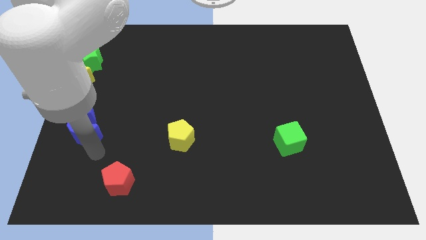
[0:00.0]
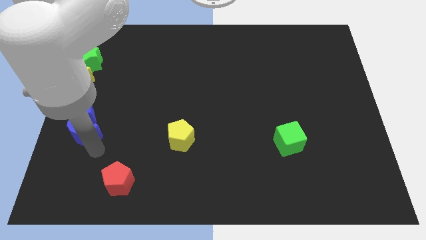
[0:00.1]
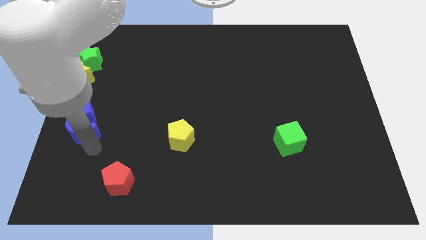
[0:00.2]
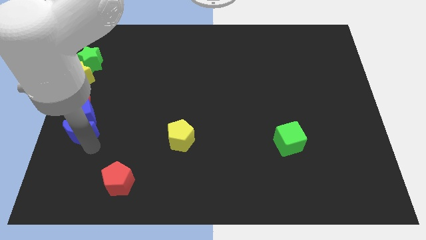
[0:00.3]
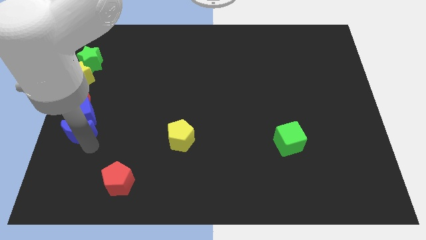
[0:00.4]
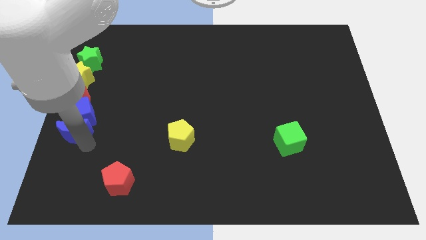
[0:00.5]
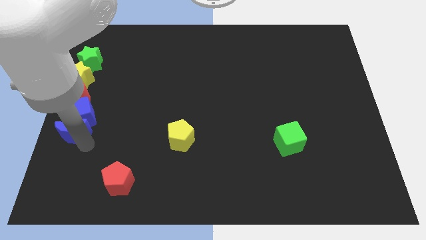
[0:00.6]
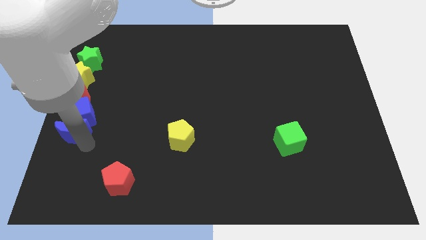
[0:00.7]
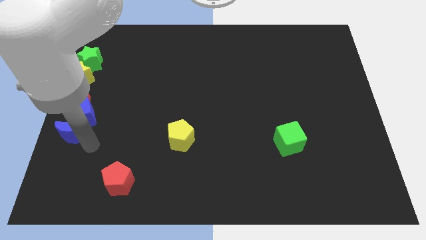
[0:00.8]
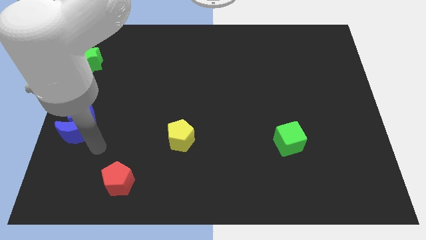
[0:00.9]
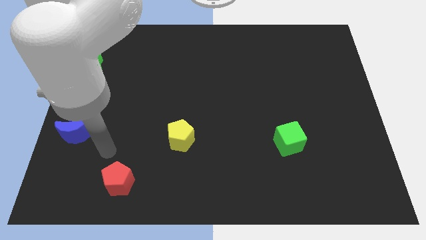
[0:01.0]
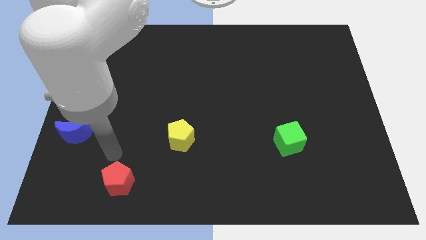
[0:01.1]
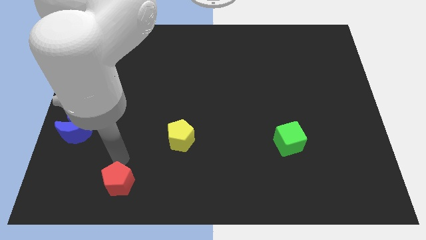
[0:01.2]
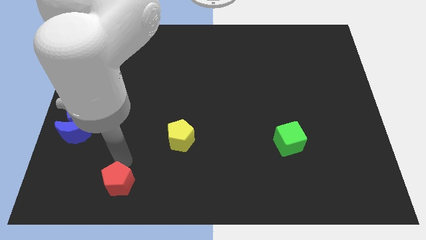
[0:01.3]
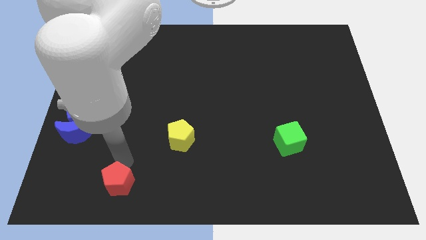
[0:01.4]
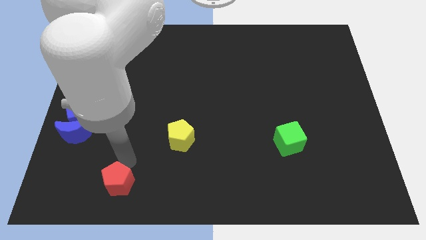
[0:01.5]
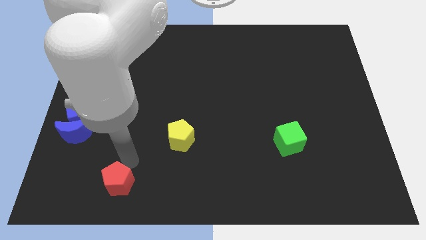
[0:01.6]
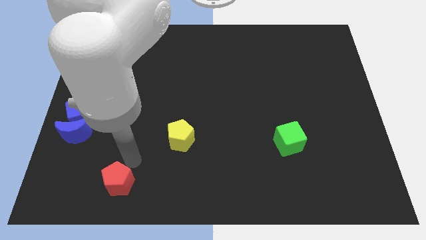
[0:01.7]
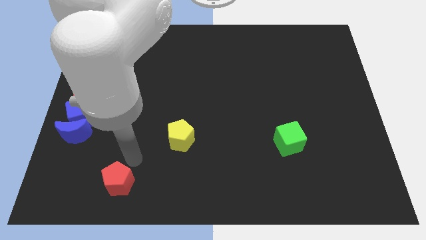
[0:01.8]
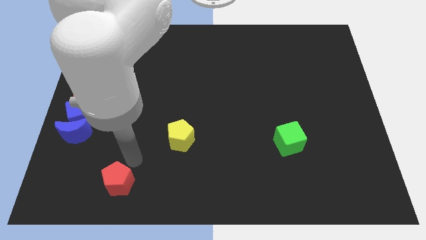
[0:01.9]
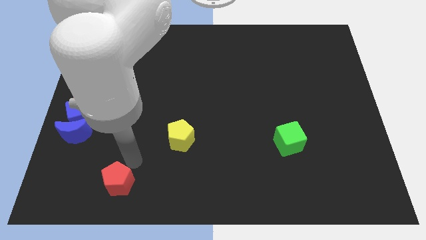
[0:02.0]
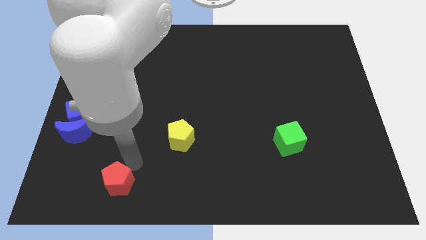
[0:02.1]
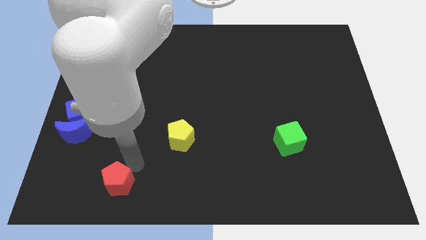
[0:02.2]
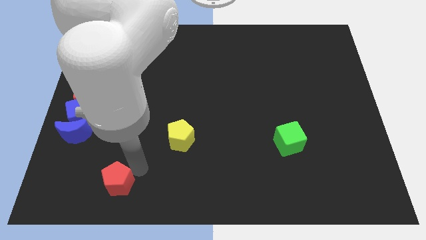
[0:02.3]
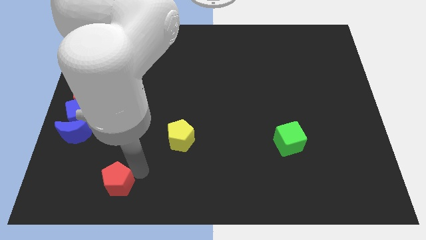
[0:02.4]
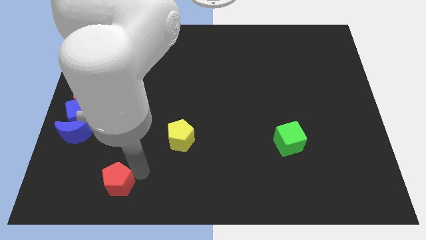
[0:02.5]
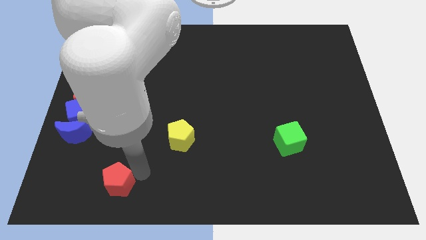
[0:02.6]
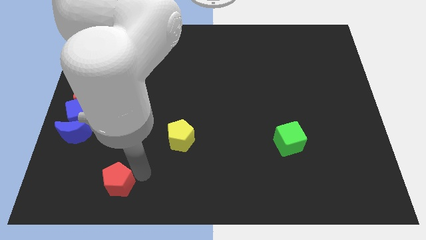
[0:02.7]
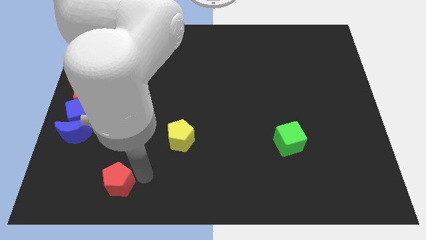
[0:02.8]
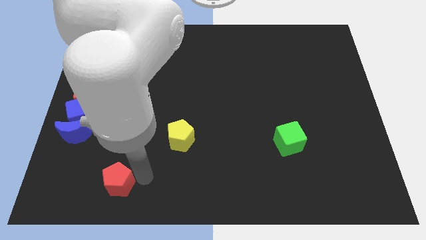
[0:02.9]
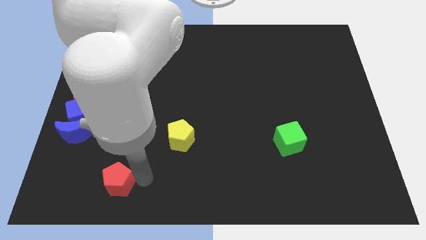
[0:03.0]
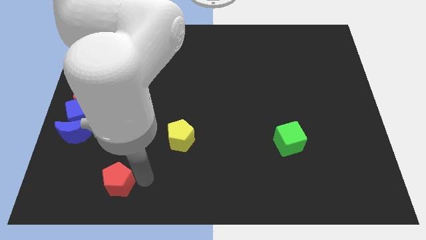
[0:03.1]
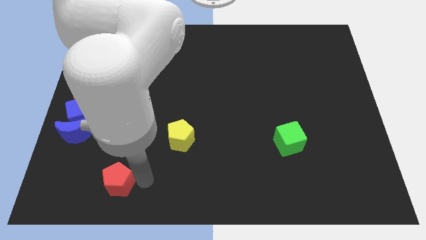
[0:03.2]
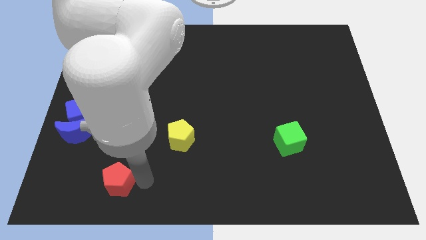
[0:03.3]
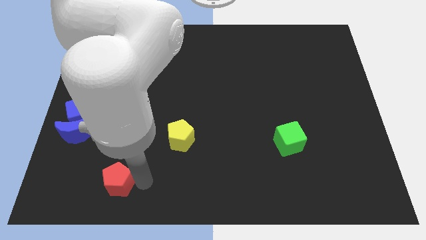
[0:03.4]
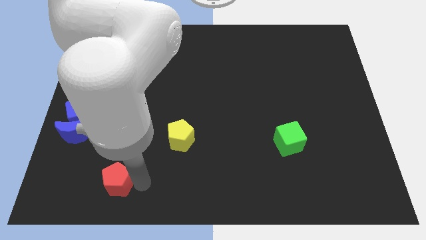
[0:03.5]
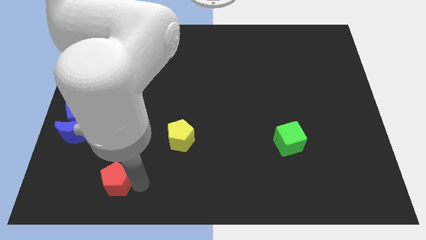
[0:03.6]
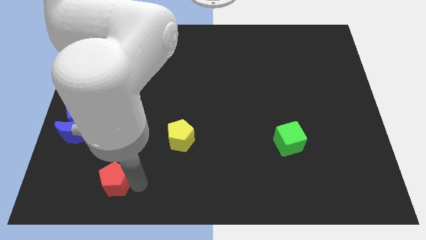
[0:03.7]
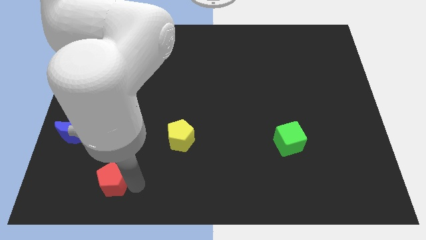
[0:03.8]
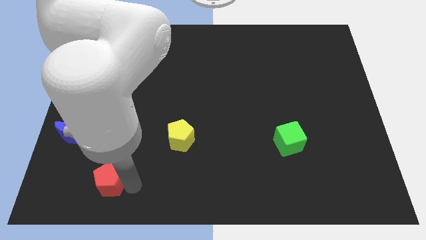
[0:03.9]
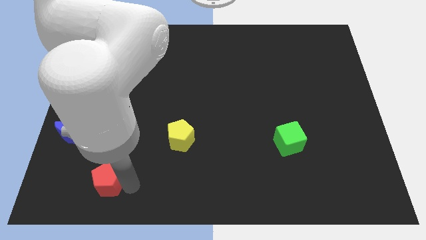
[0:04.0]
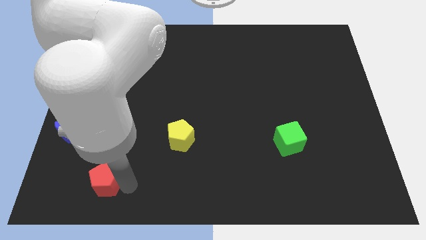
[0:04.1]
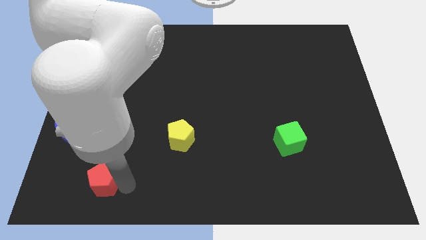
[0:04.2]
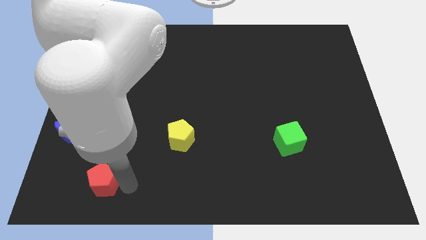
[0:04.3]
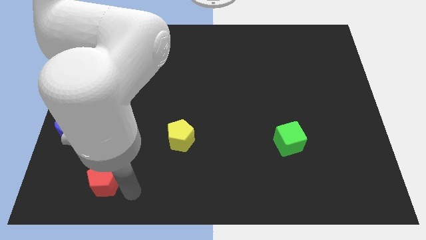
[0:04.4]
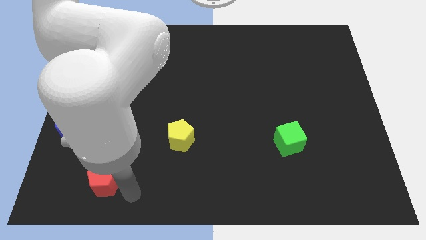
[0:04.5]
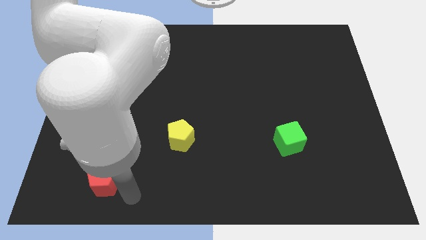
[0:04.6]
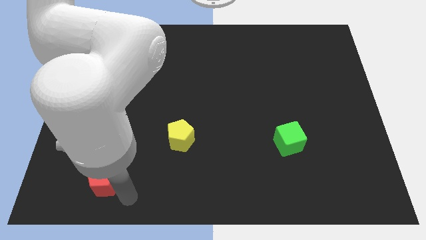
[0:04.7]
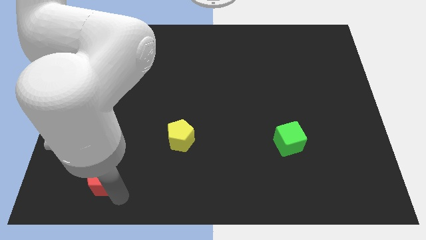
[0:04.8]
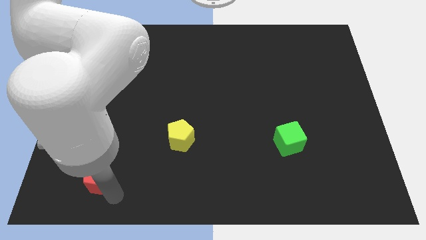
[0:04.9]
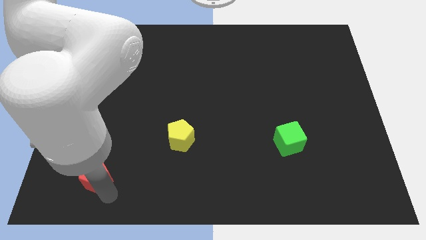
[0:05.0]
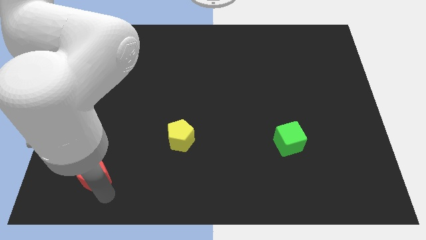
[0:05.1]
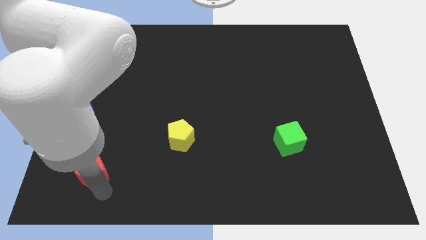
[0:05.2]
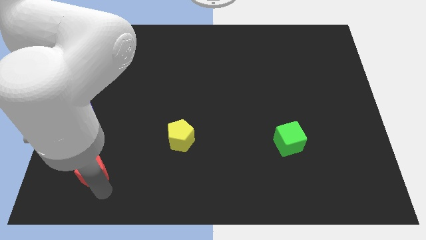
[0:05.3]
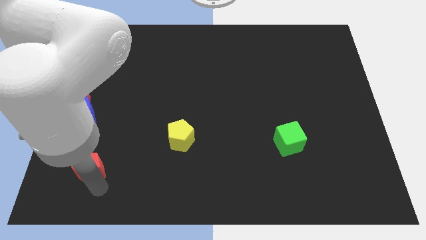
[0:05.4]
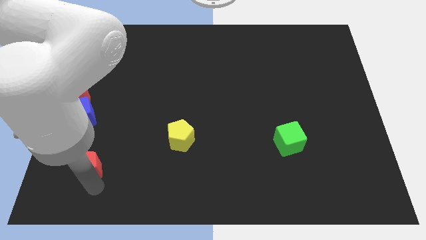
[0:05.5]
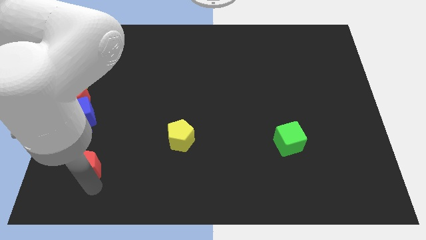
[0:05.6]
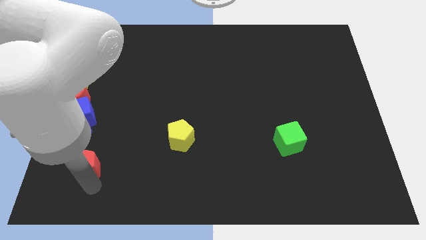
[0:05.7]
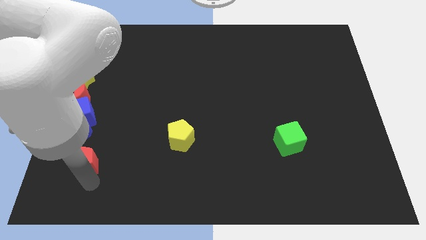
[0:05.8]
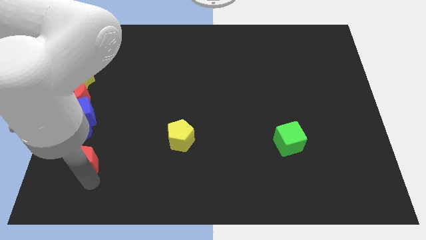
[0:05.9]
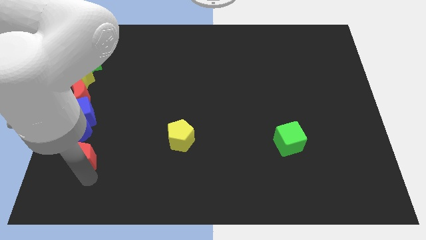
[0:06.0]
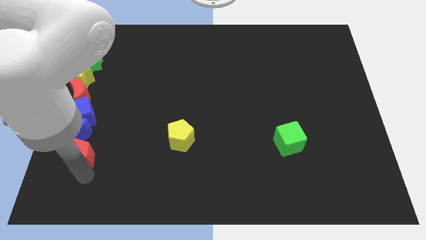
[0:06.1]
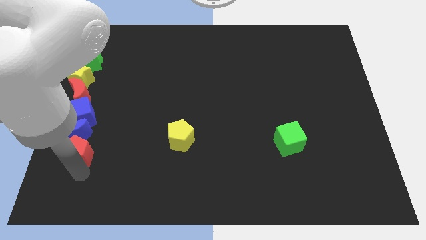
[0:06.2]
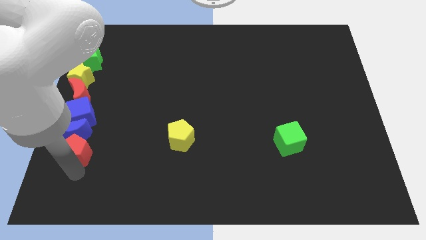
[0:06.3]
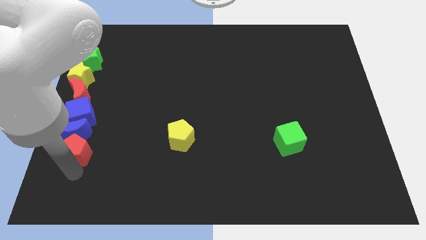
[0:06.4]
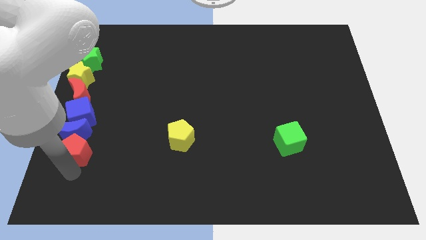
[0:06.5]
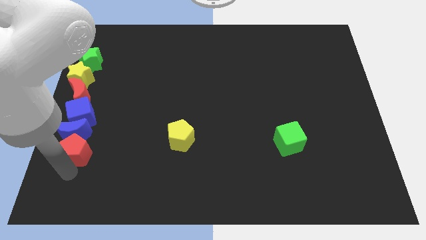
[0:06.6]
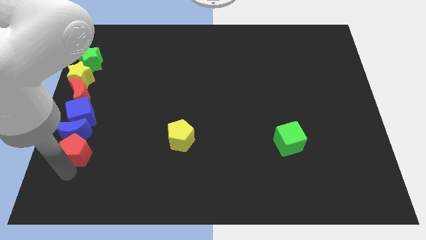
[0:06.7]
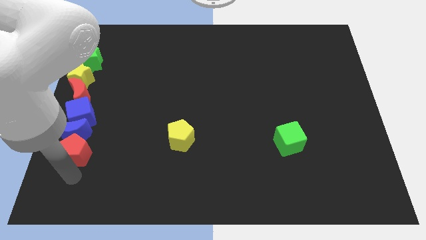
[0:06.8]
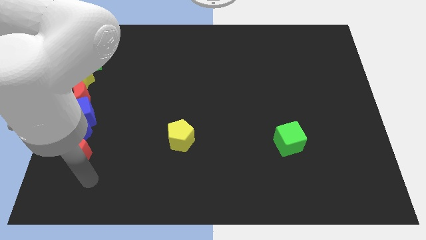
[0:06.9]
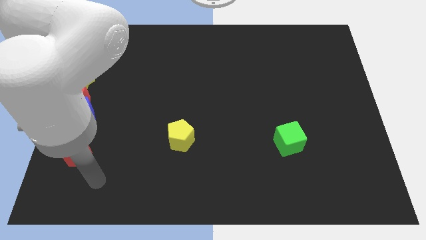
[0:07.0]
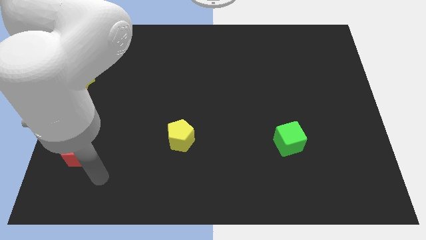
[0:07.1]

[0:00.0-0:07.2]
place the red pentagon to the bottom of the blue moon to form vertical line

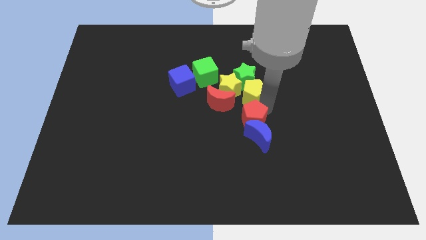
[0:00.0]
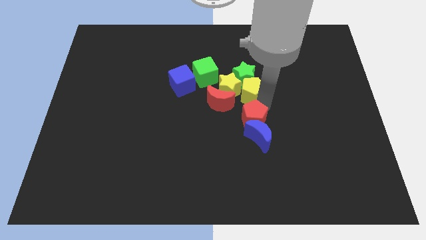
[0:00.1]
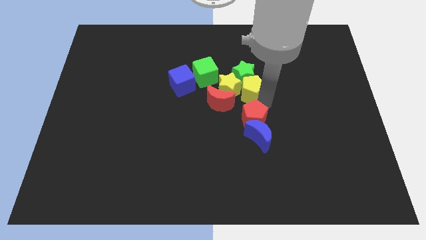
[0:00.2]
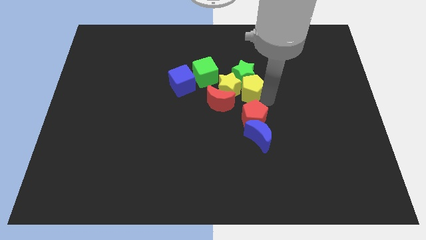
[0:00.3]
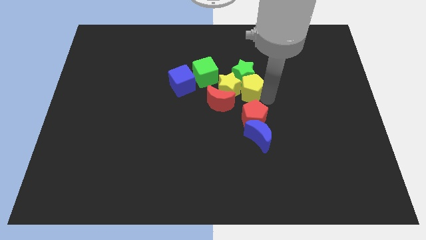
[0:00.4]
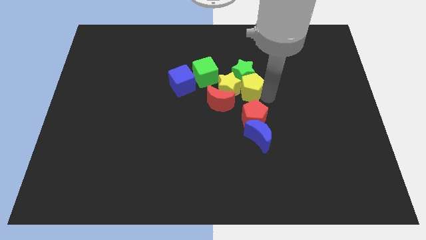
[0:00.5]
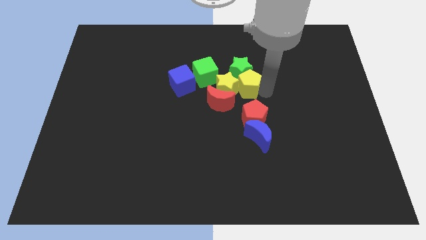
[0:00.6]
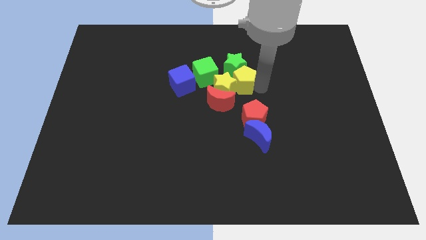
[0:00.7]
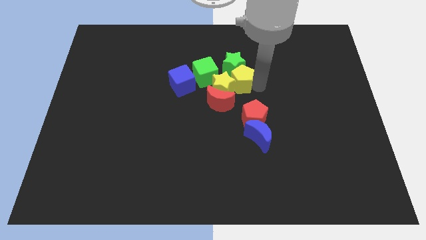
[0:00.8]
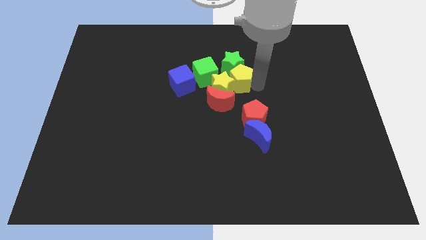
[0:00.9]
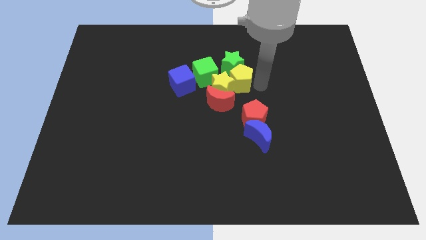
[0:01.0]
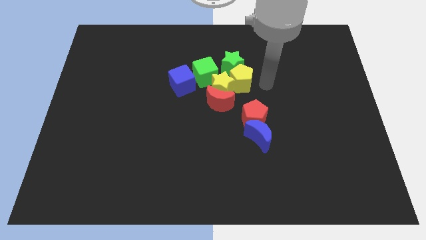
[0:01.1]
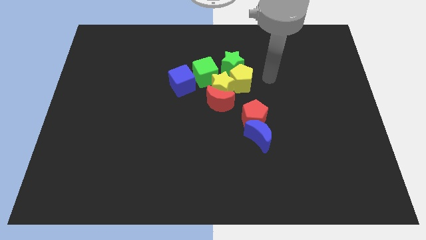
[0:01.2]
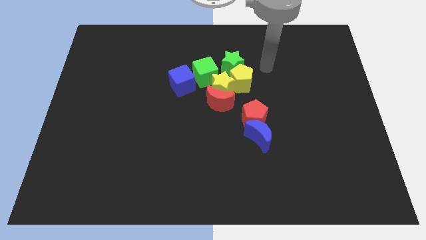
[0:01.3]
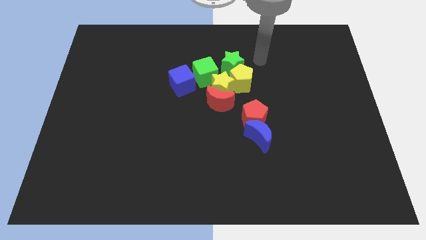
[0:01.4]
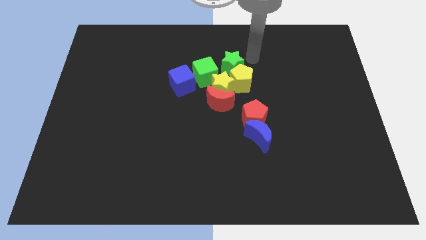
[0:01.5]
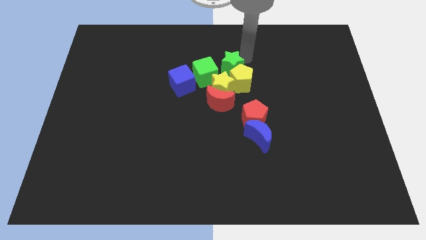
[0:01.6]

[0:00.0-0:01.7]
move yellow pentagon into green star
